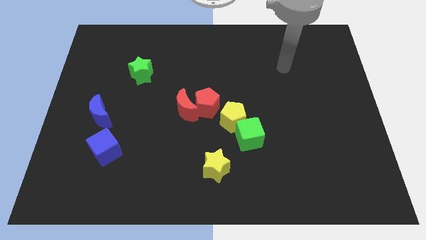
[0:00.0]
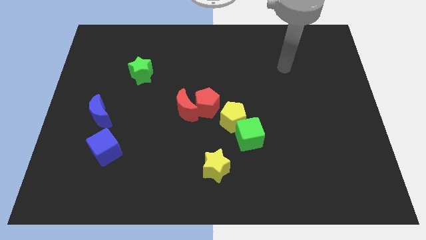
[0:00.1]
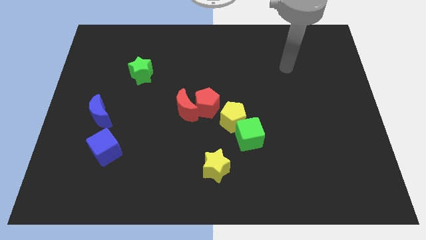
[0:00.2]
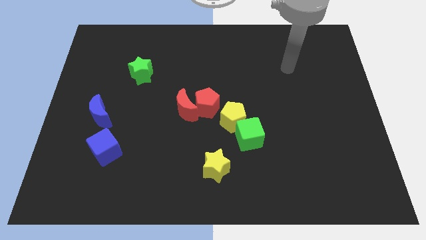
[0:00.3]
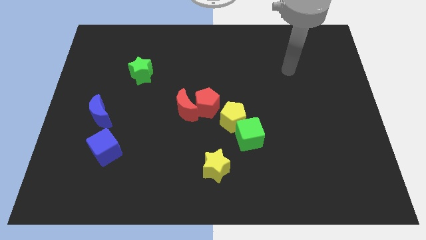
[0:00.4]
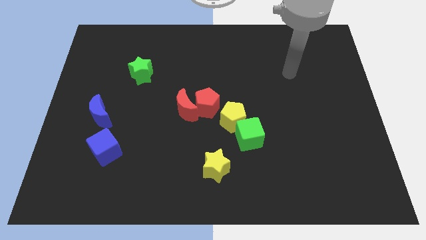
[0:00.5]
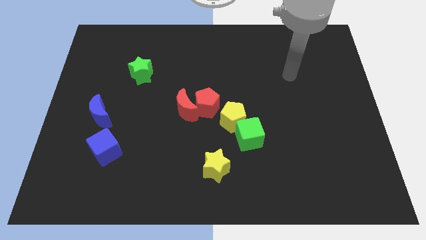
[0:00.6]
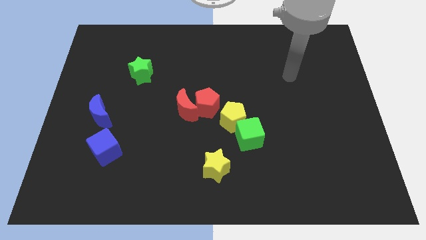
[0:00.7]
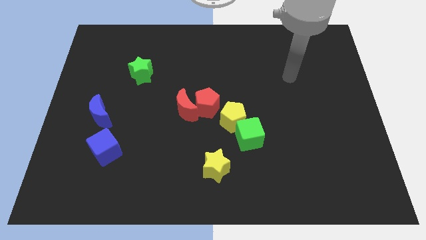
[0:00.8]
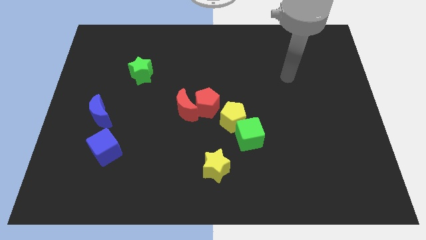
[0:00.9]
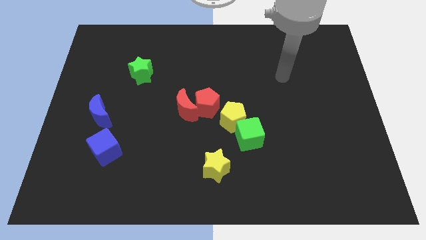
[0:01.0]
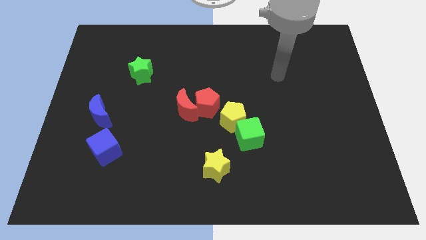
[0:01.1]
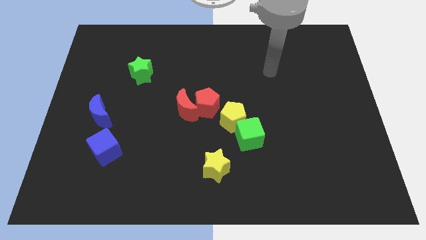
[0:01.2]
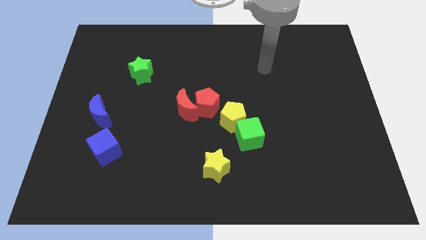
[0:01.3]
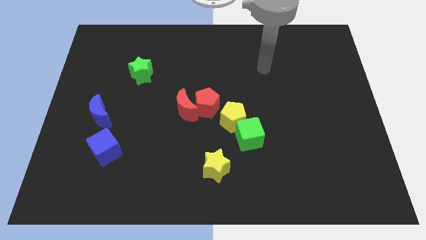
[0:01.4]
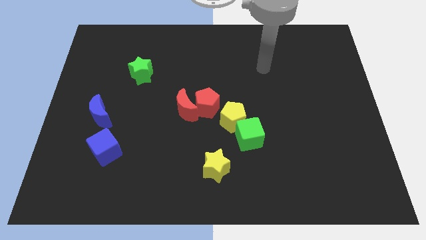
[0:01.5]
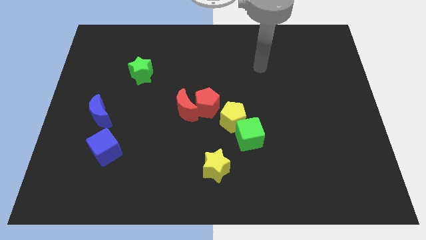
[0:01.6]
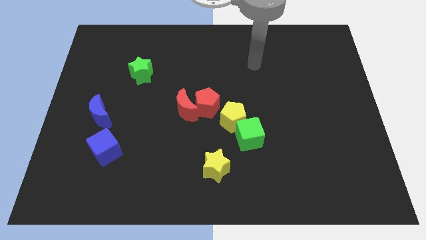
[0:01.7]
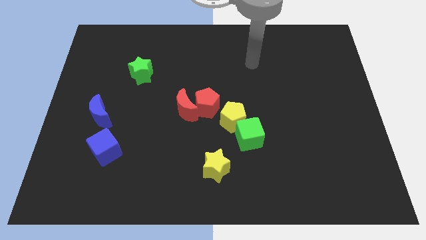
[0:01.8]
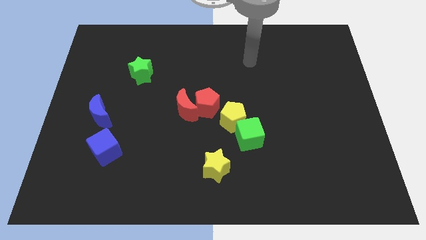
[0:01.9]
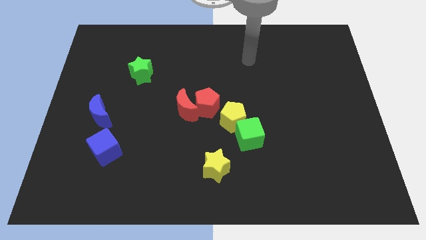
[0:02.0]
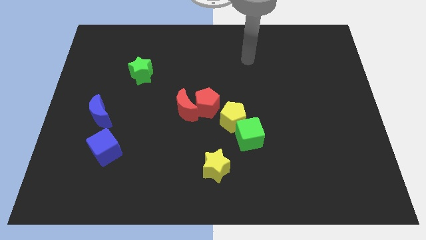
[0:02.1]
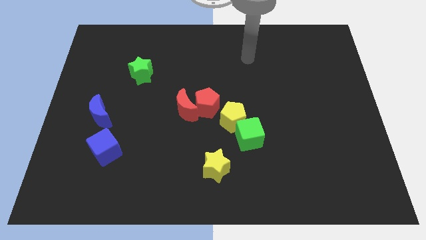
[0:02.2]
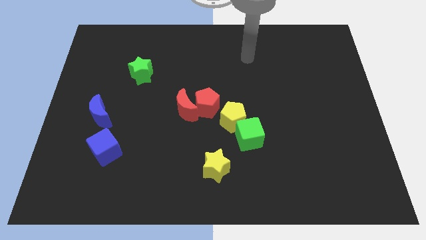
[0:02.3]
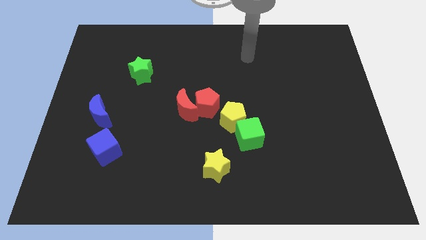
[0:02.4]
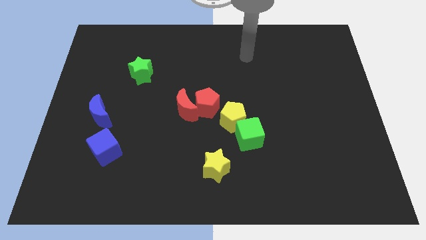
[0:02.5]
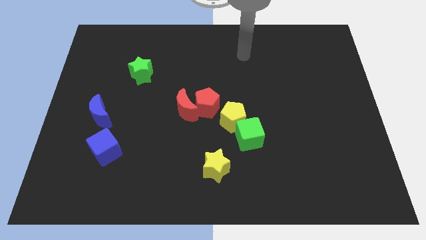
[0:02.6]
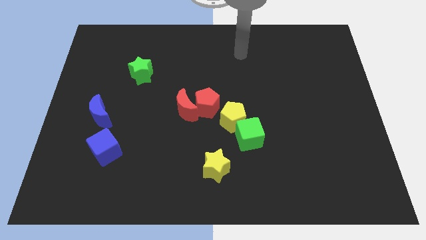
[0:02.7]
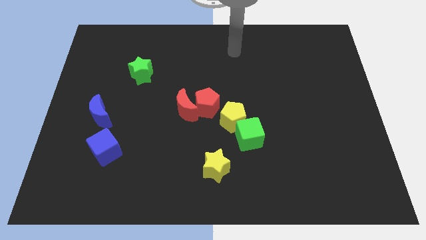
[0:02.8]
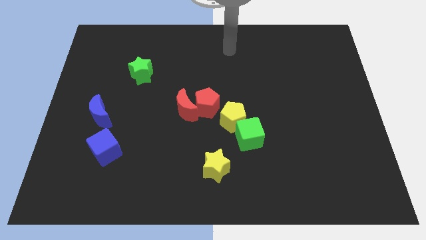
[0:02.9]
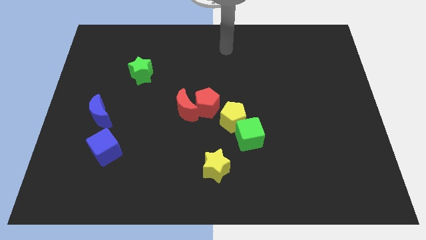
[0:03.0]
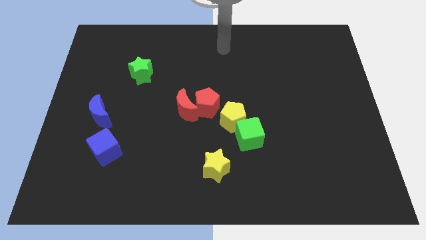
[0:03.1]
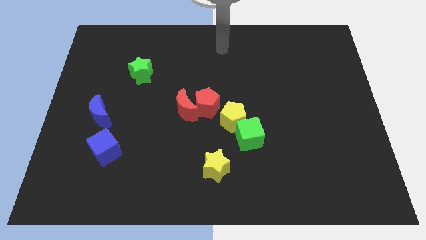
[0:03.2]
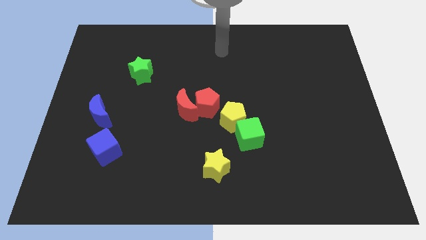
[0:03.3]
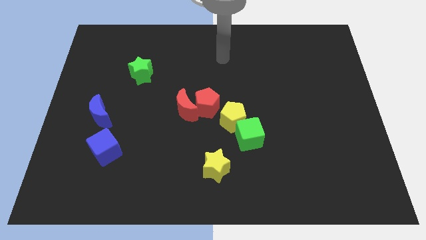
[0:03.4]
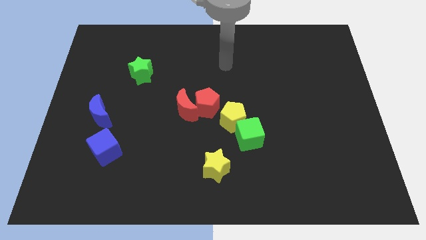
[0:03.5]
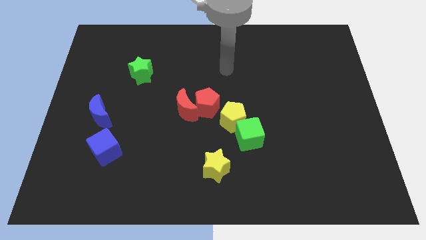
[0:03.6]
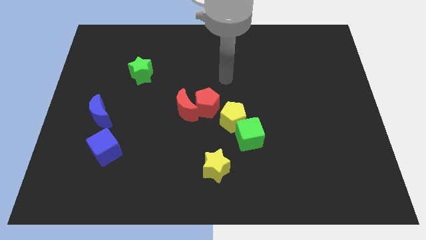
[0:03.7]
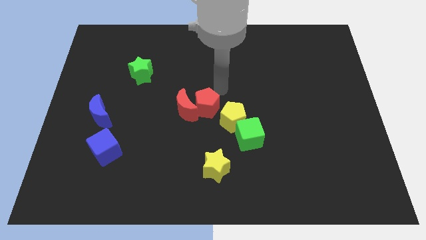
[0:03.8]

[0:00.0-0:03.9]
move the arm towards the right top of the red pentagon

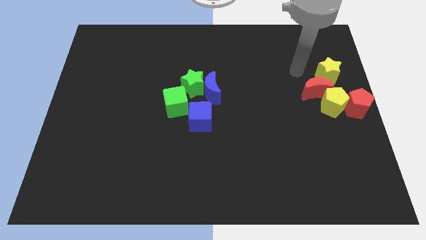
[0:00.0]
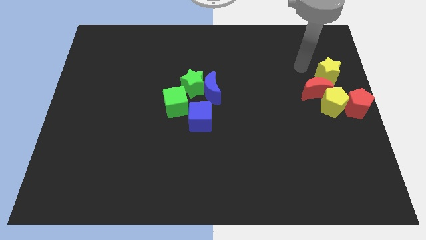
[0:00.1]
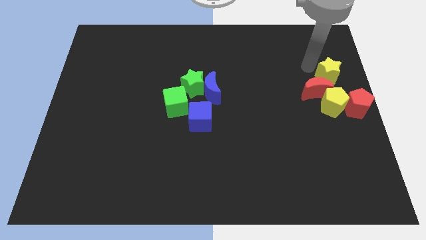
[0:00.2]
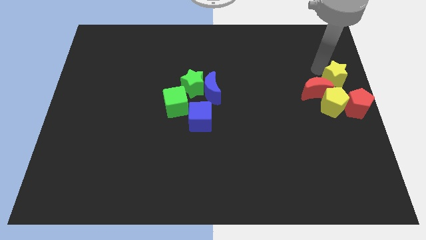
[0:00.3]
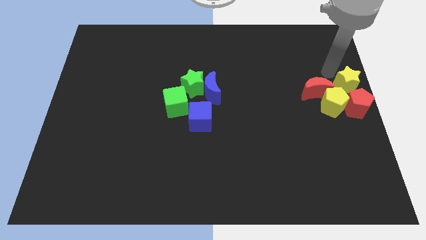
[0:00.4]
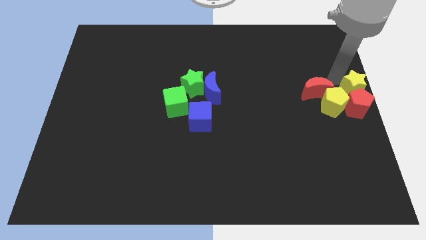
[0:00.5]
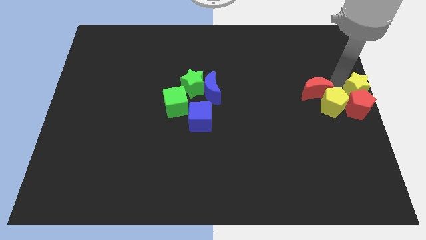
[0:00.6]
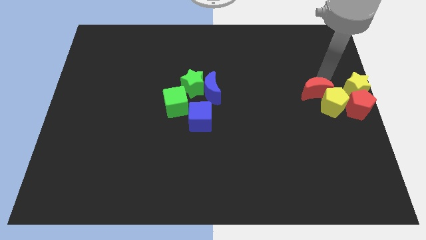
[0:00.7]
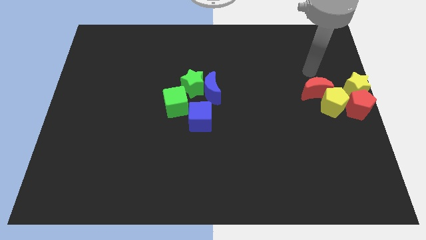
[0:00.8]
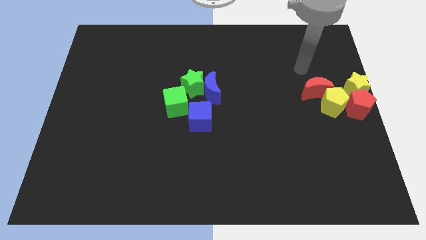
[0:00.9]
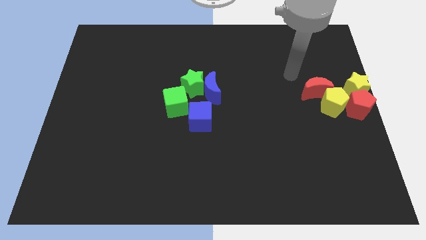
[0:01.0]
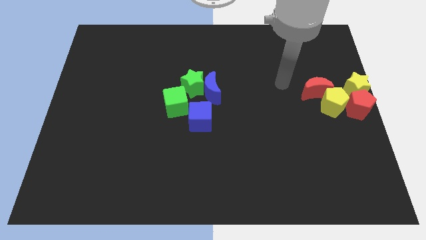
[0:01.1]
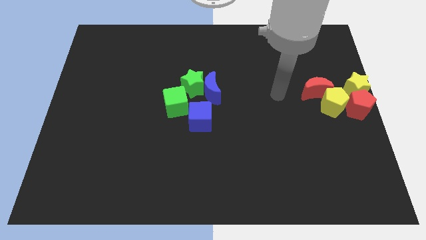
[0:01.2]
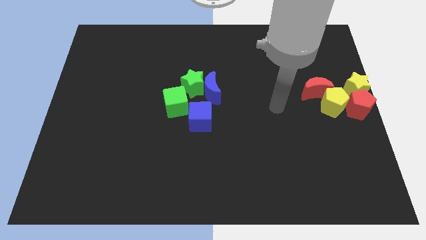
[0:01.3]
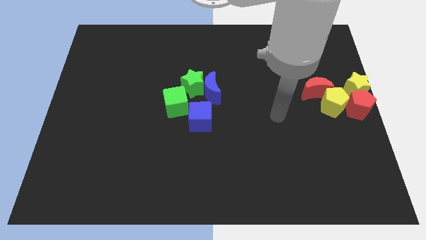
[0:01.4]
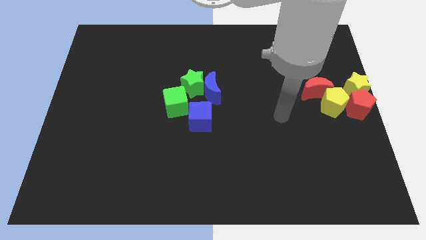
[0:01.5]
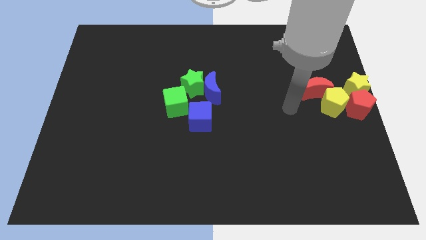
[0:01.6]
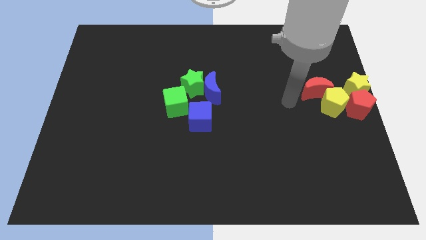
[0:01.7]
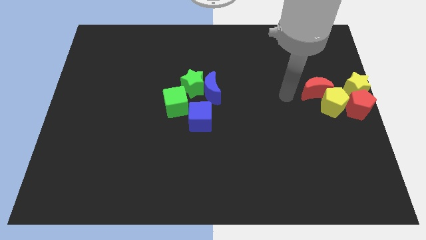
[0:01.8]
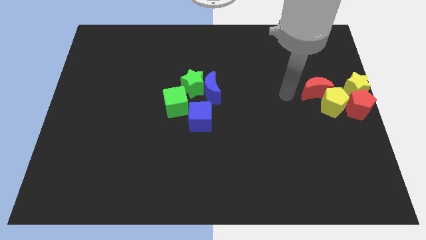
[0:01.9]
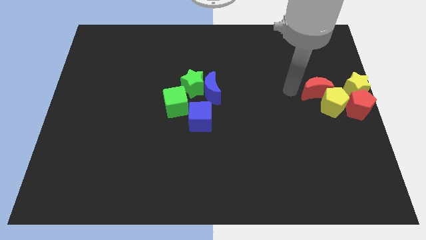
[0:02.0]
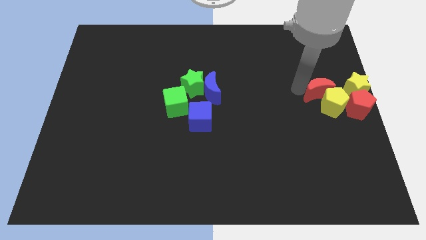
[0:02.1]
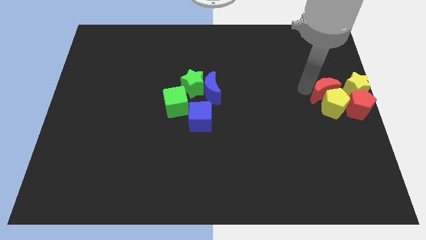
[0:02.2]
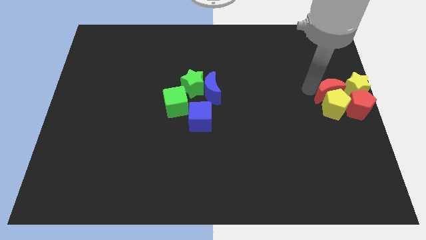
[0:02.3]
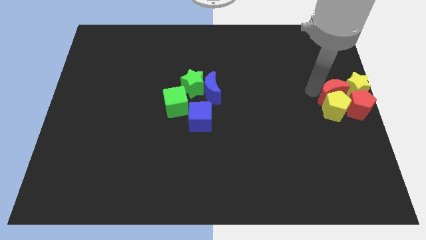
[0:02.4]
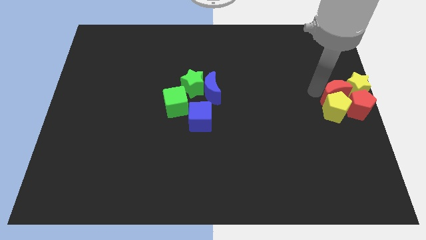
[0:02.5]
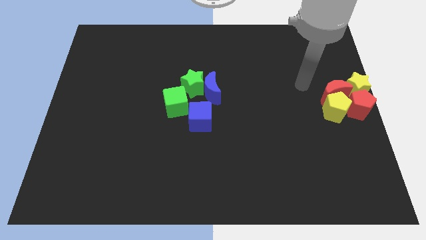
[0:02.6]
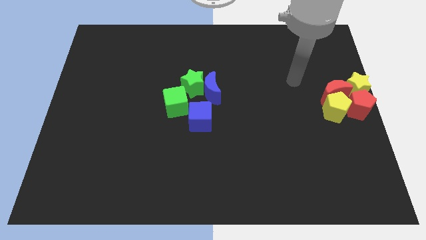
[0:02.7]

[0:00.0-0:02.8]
group up the yellow and red blocks together at right center of the board

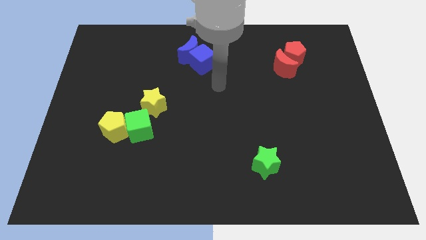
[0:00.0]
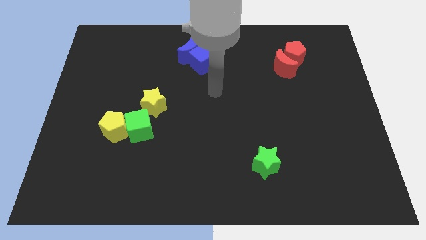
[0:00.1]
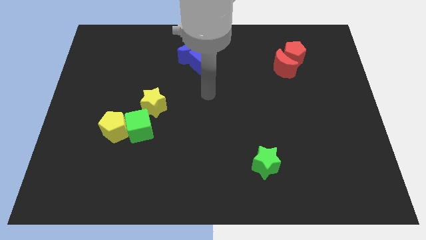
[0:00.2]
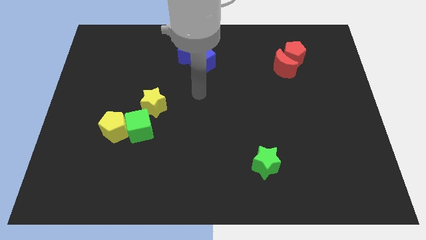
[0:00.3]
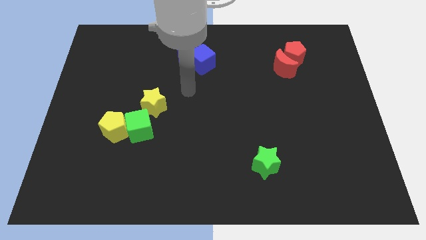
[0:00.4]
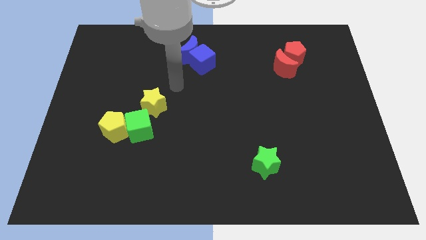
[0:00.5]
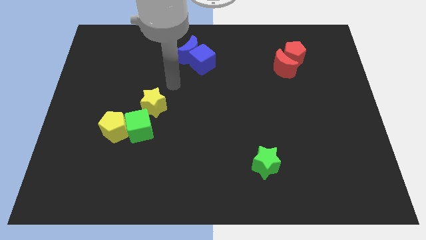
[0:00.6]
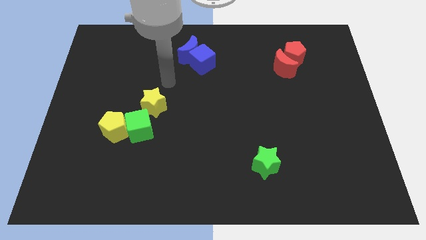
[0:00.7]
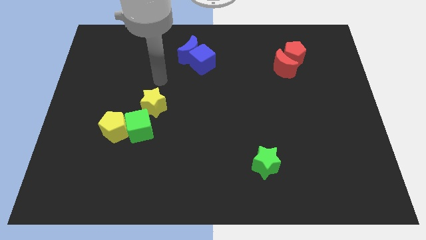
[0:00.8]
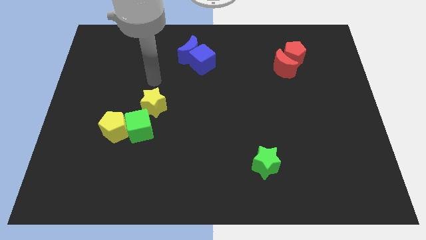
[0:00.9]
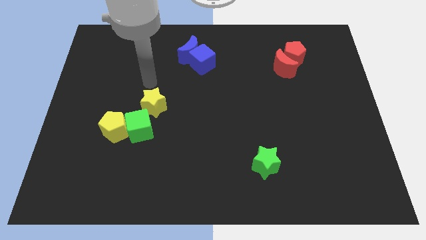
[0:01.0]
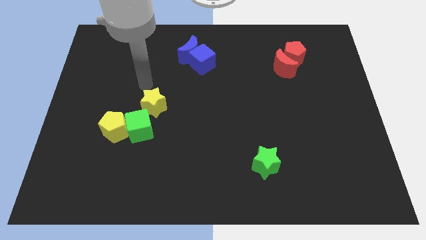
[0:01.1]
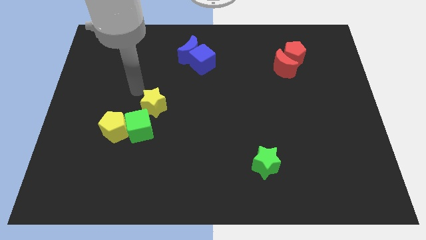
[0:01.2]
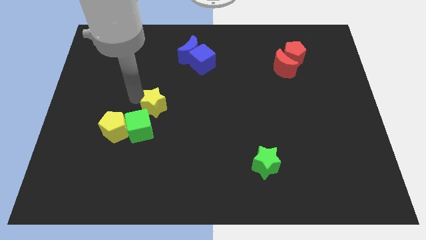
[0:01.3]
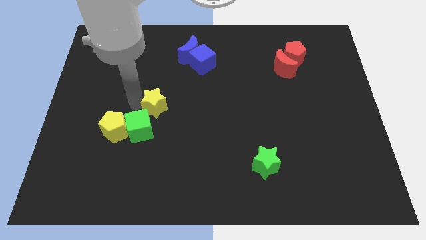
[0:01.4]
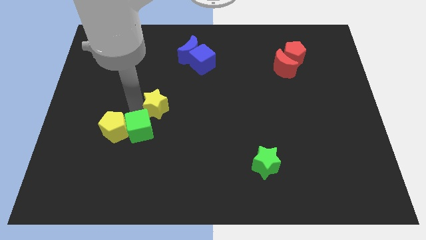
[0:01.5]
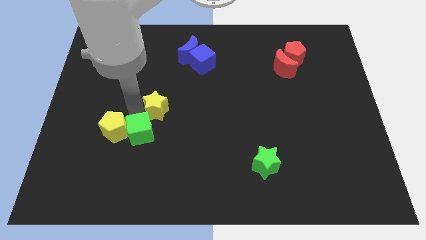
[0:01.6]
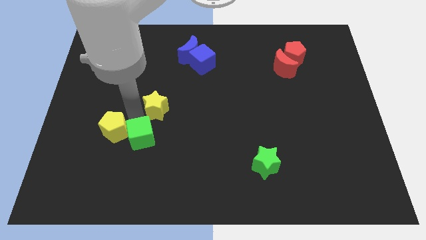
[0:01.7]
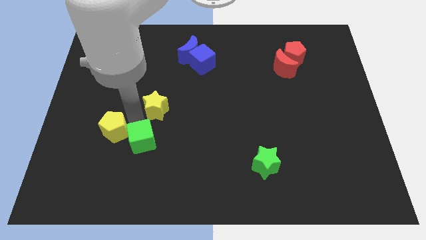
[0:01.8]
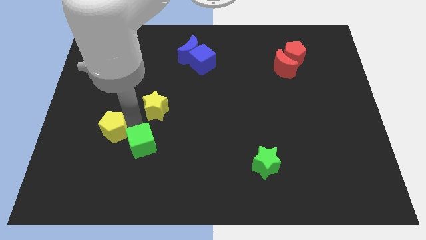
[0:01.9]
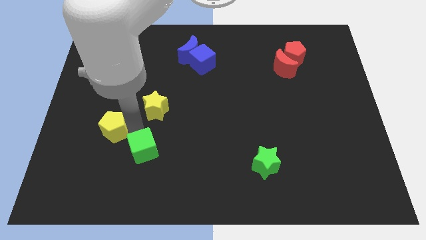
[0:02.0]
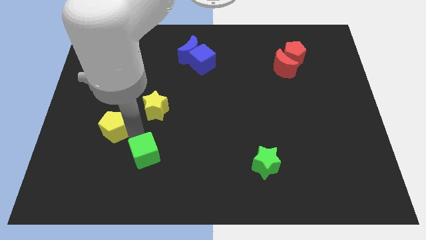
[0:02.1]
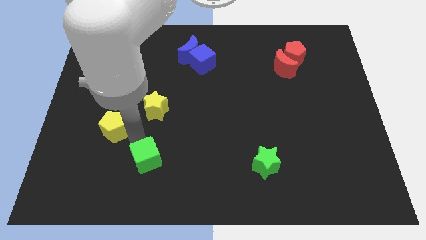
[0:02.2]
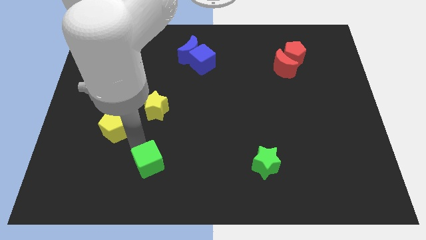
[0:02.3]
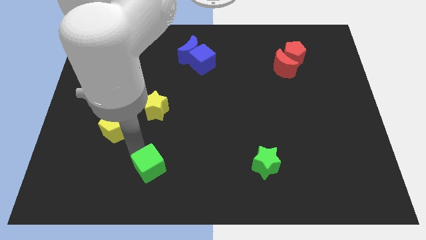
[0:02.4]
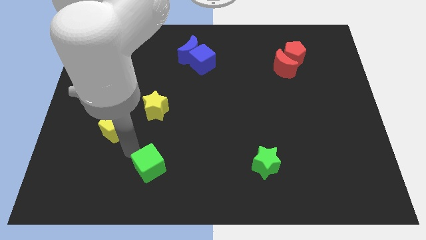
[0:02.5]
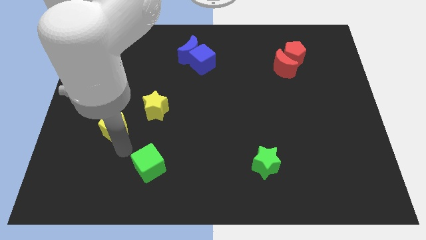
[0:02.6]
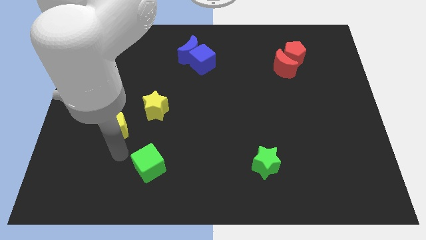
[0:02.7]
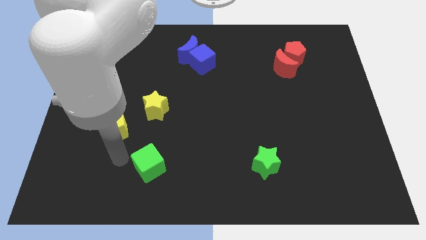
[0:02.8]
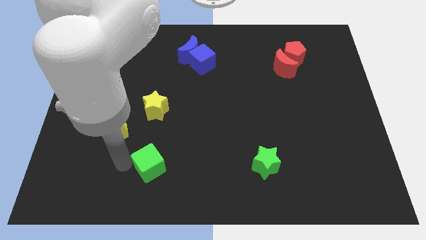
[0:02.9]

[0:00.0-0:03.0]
separate the green cube from yellow blocks
